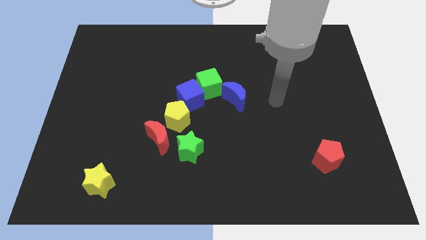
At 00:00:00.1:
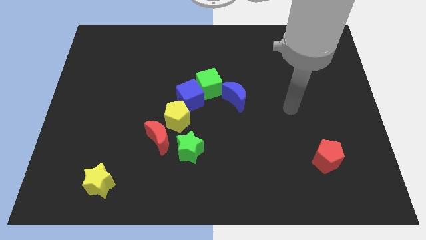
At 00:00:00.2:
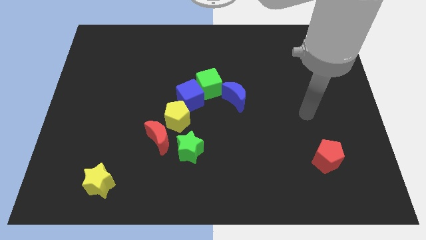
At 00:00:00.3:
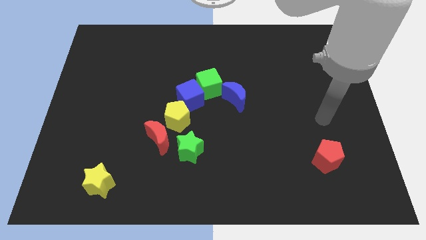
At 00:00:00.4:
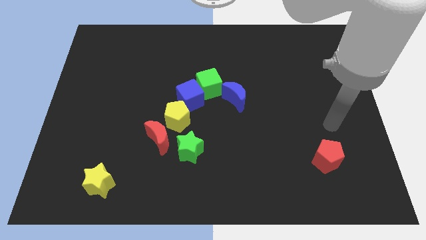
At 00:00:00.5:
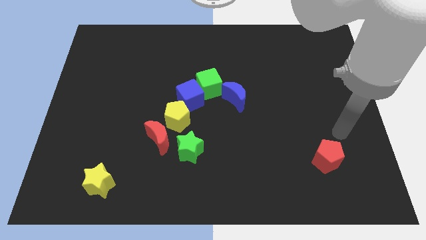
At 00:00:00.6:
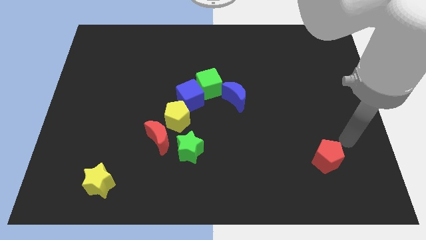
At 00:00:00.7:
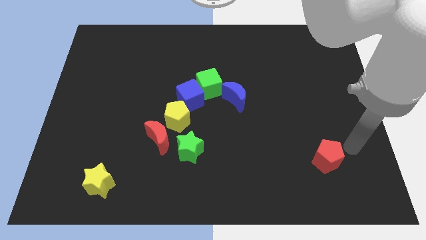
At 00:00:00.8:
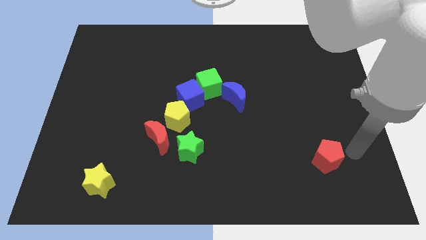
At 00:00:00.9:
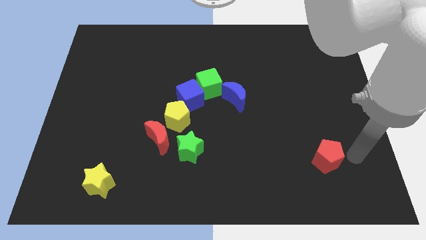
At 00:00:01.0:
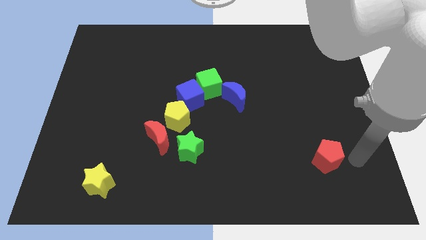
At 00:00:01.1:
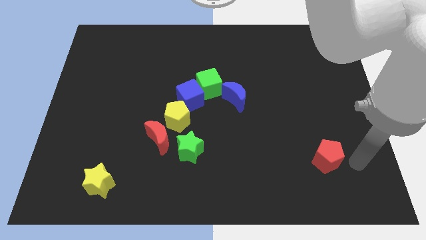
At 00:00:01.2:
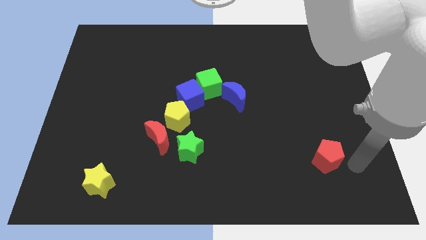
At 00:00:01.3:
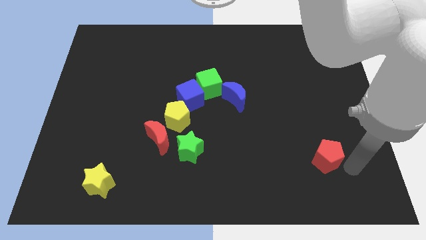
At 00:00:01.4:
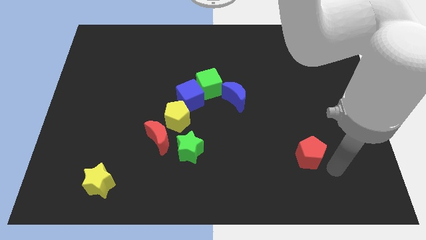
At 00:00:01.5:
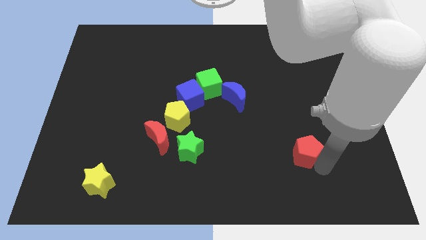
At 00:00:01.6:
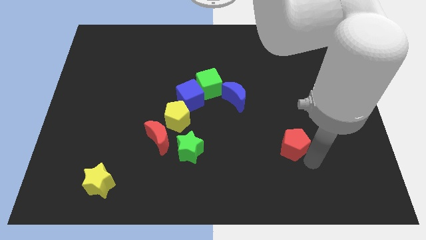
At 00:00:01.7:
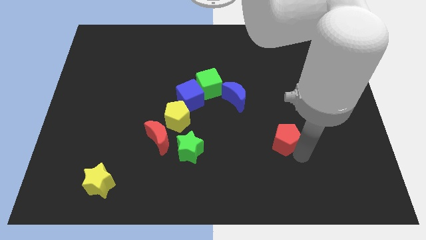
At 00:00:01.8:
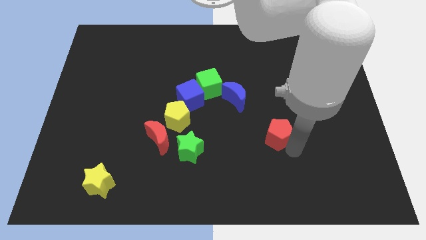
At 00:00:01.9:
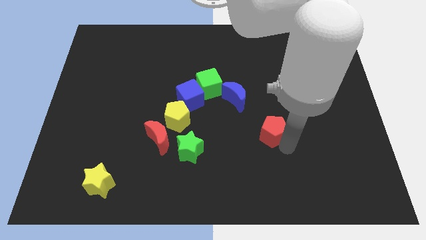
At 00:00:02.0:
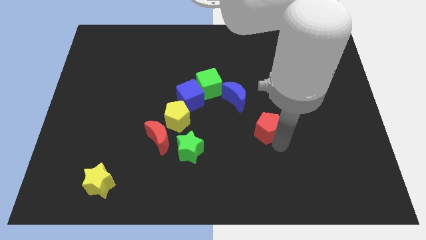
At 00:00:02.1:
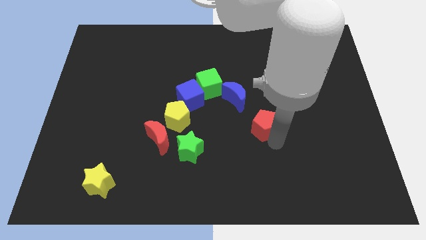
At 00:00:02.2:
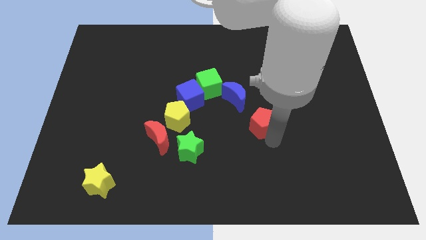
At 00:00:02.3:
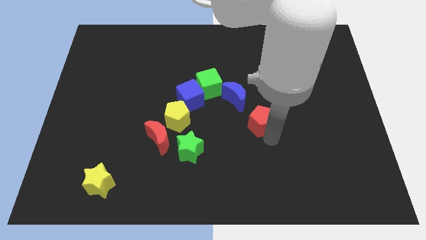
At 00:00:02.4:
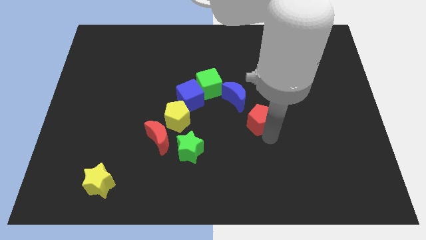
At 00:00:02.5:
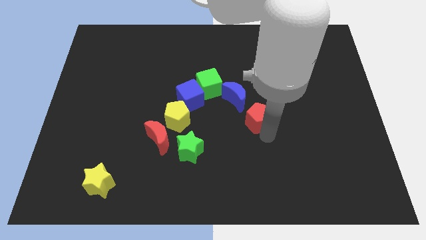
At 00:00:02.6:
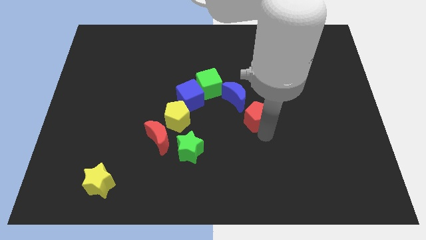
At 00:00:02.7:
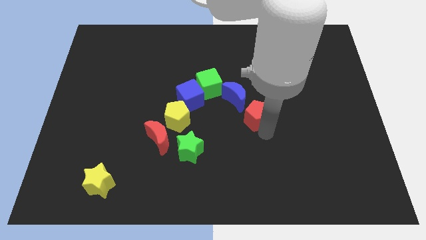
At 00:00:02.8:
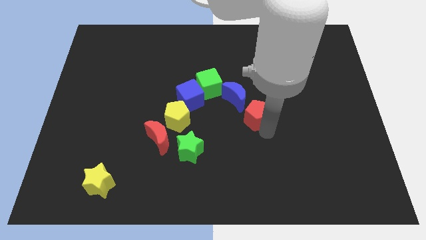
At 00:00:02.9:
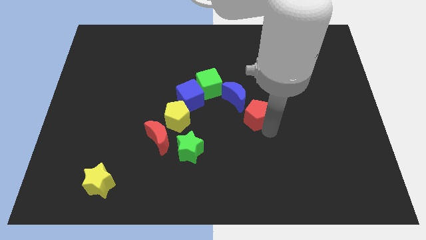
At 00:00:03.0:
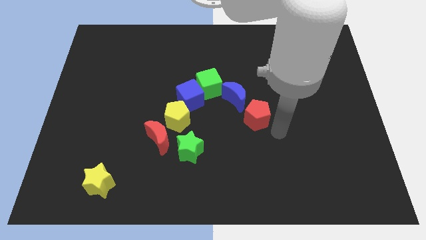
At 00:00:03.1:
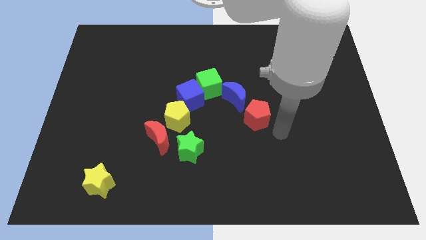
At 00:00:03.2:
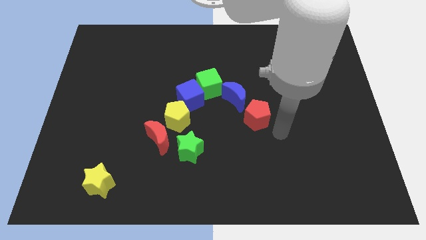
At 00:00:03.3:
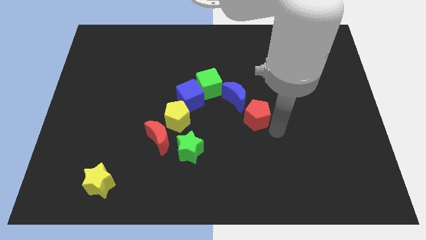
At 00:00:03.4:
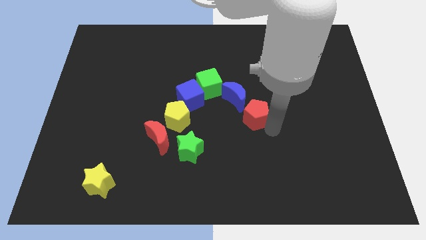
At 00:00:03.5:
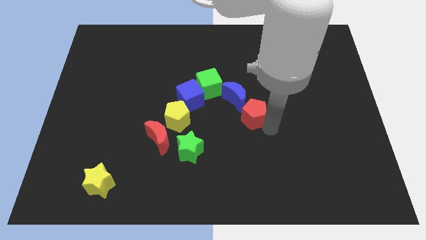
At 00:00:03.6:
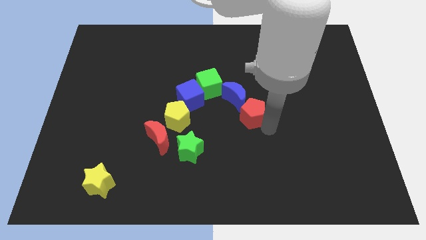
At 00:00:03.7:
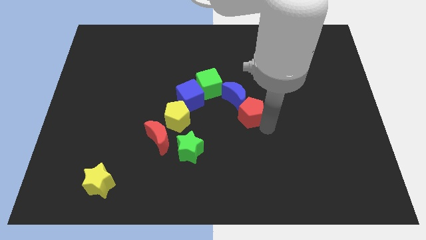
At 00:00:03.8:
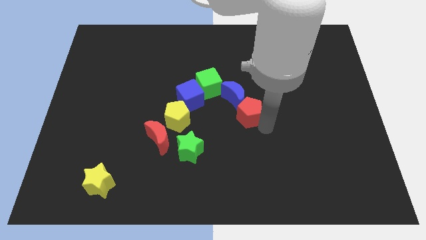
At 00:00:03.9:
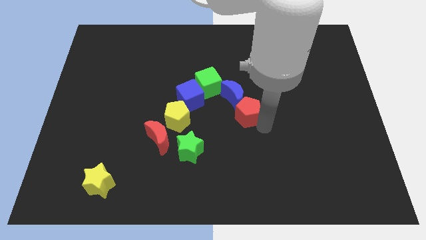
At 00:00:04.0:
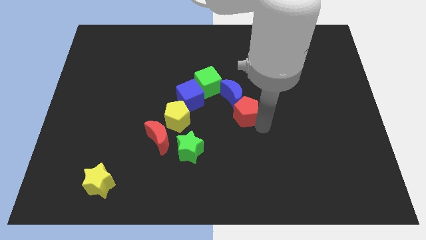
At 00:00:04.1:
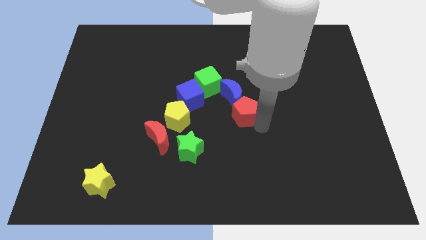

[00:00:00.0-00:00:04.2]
move the red pentagon into the blue moon

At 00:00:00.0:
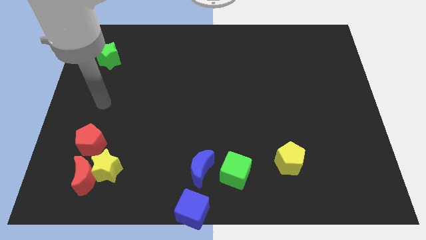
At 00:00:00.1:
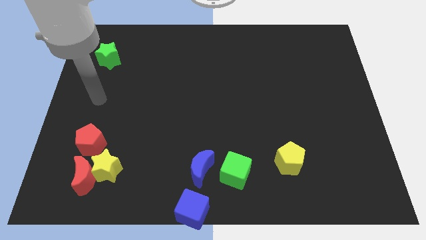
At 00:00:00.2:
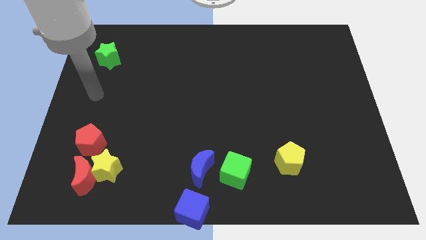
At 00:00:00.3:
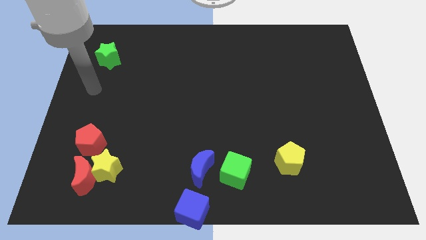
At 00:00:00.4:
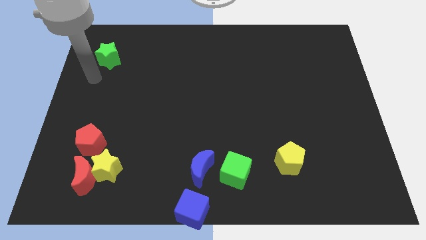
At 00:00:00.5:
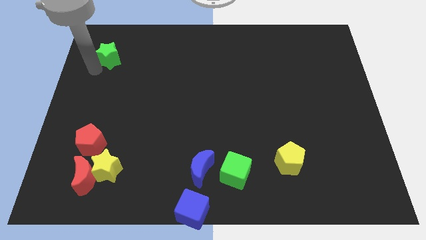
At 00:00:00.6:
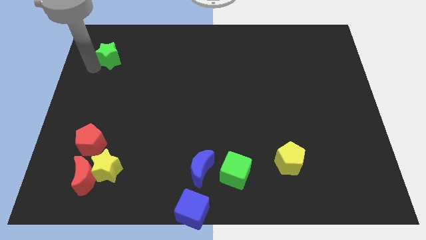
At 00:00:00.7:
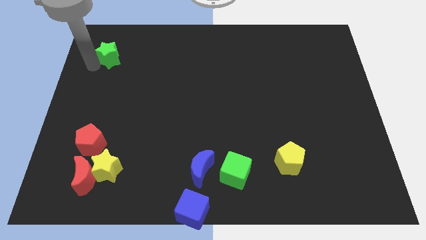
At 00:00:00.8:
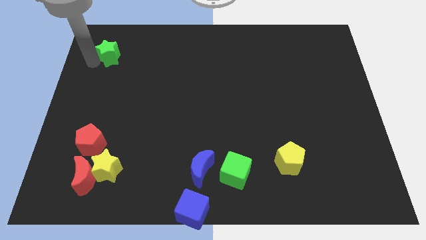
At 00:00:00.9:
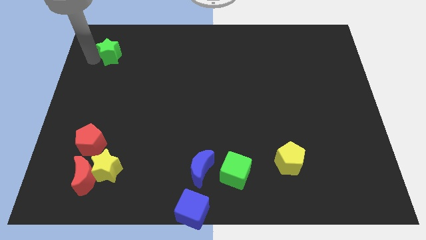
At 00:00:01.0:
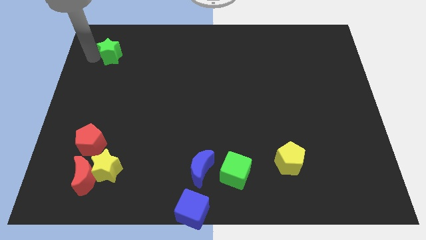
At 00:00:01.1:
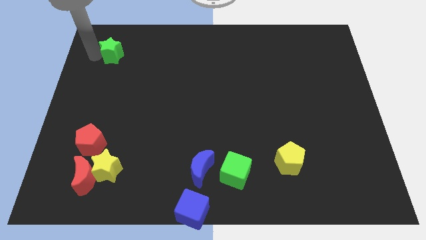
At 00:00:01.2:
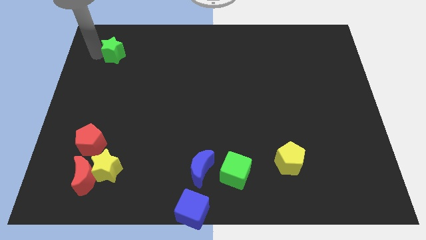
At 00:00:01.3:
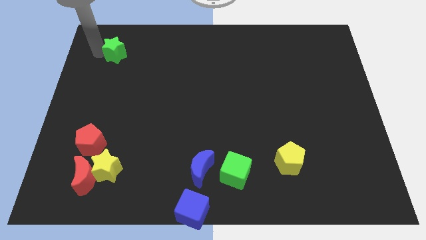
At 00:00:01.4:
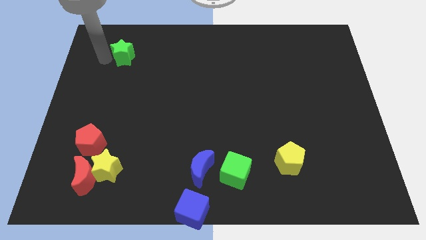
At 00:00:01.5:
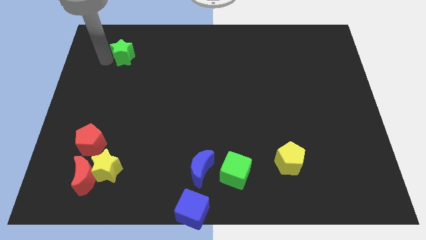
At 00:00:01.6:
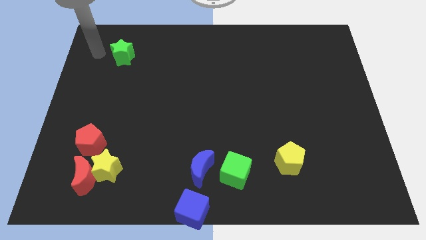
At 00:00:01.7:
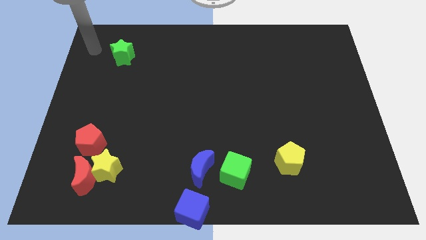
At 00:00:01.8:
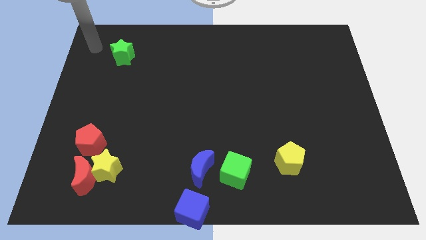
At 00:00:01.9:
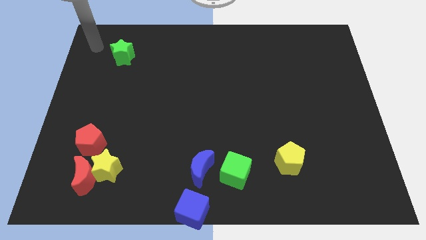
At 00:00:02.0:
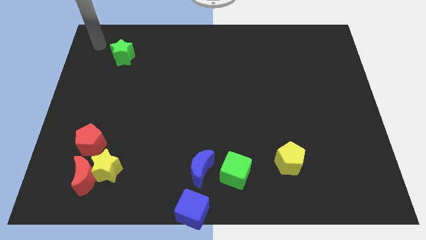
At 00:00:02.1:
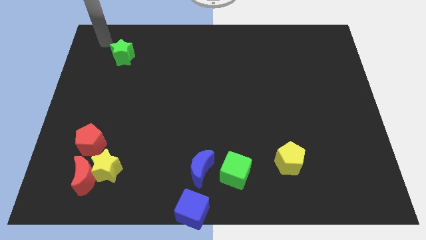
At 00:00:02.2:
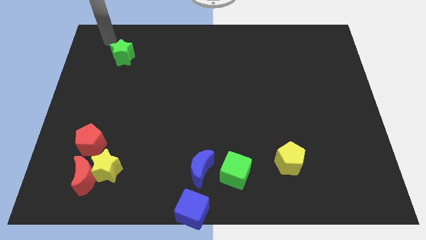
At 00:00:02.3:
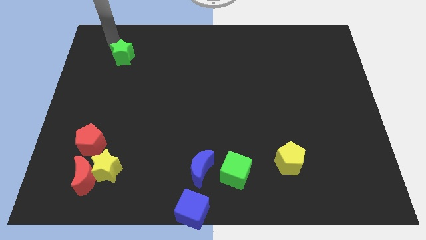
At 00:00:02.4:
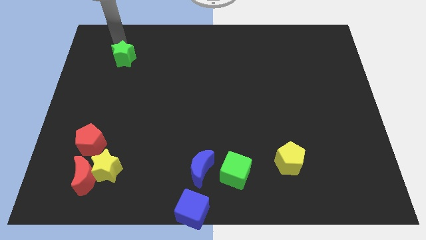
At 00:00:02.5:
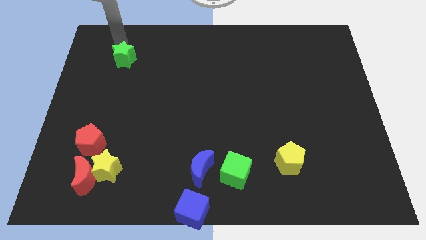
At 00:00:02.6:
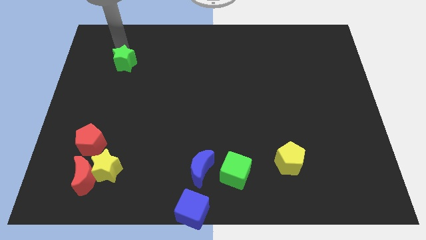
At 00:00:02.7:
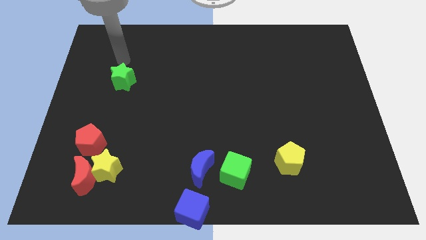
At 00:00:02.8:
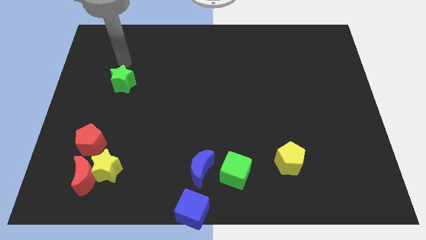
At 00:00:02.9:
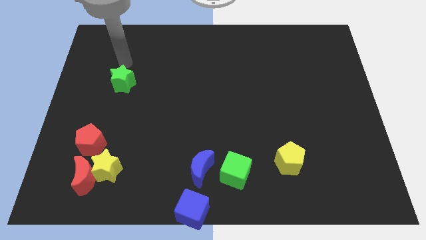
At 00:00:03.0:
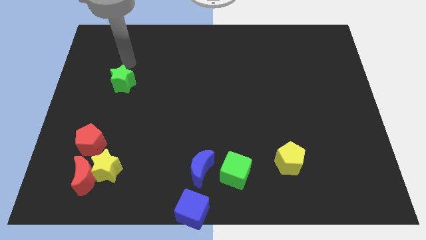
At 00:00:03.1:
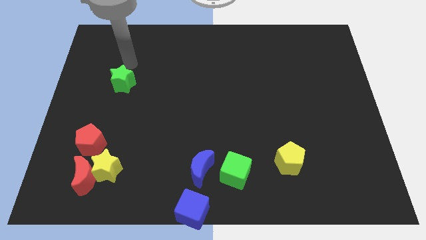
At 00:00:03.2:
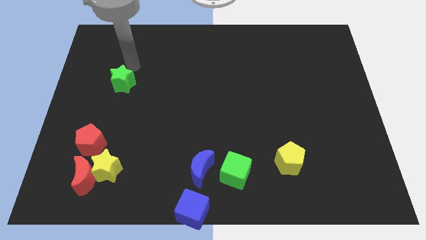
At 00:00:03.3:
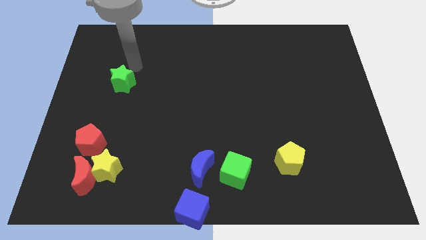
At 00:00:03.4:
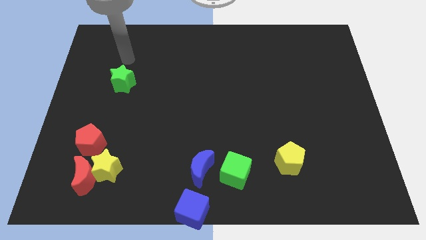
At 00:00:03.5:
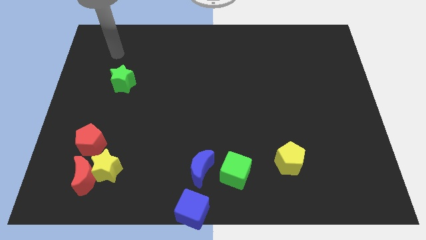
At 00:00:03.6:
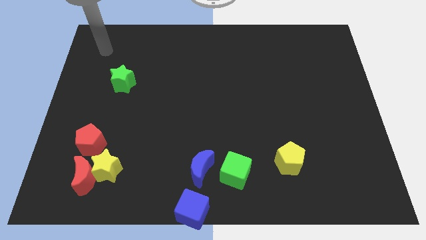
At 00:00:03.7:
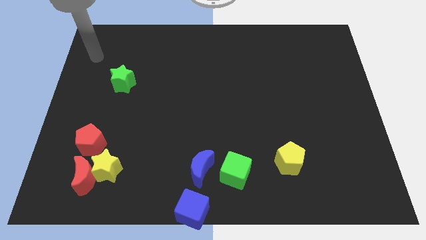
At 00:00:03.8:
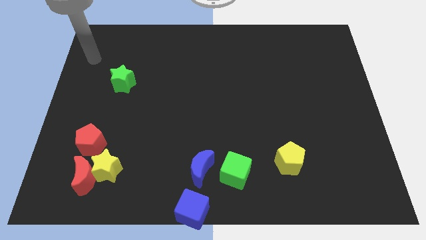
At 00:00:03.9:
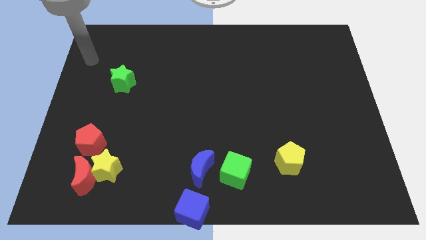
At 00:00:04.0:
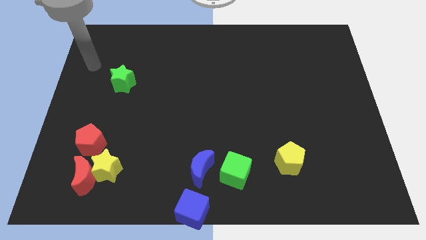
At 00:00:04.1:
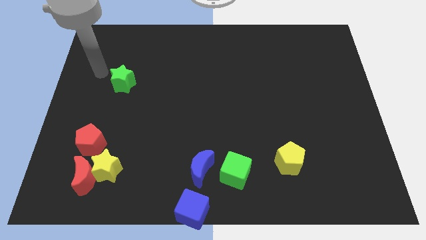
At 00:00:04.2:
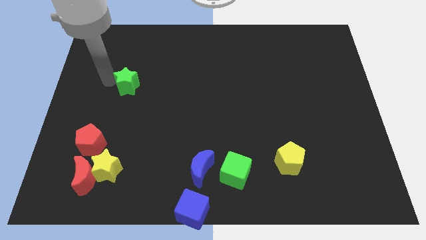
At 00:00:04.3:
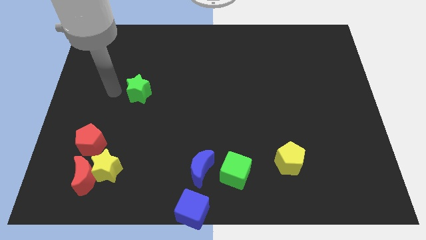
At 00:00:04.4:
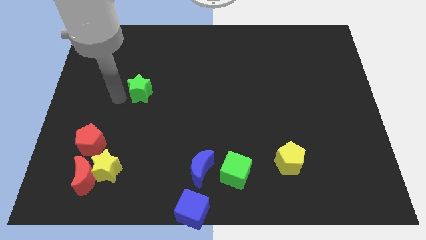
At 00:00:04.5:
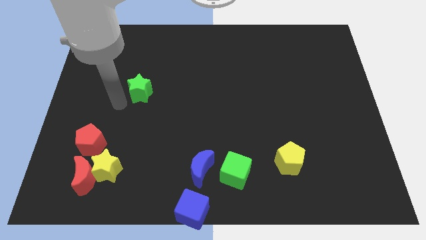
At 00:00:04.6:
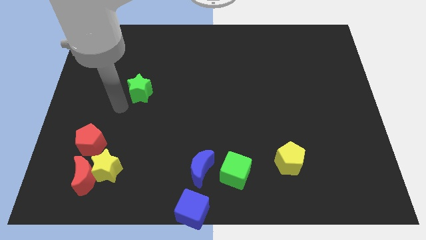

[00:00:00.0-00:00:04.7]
push the green star towards the bottom
